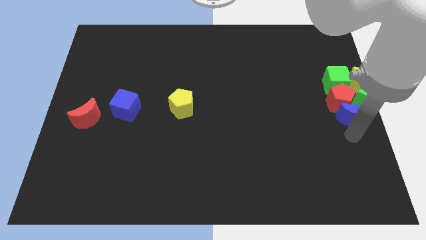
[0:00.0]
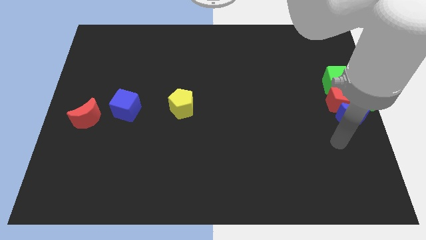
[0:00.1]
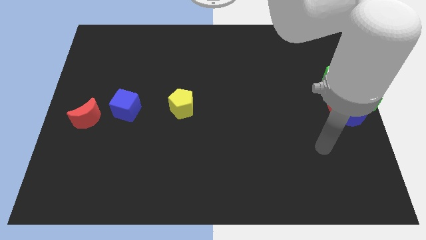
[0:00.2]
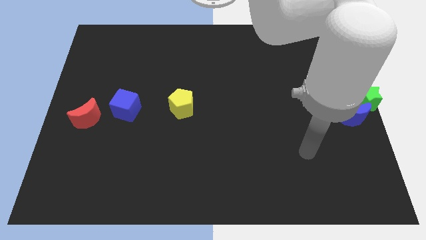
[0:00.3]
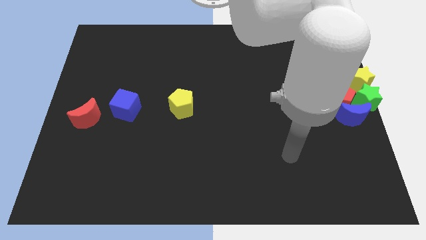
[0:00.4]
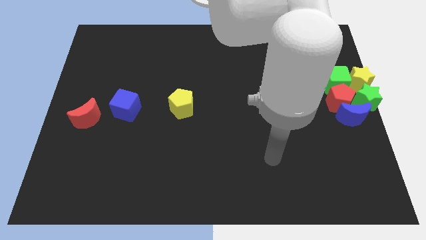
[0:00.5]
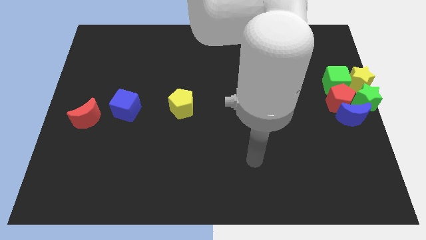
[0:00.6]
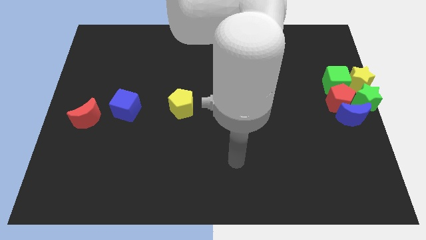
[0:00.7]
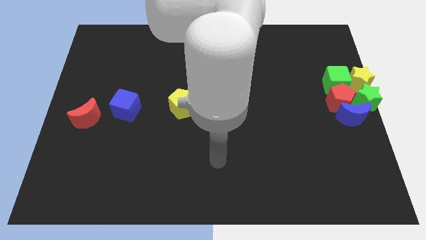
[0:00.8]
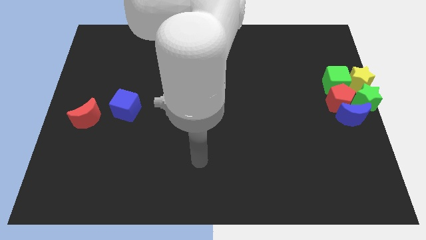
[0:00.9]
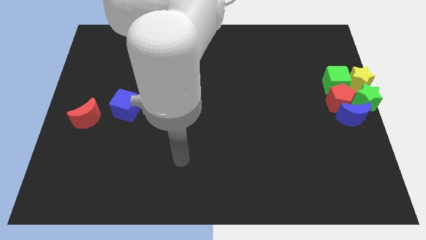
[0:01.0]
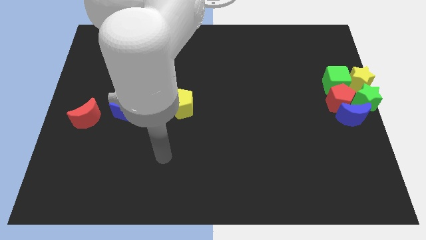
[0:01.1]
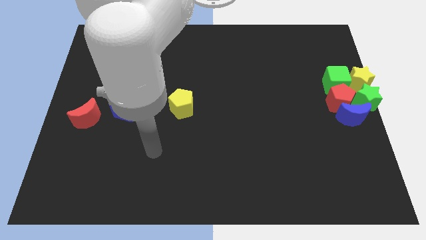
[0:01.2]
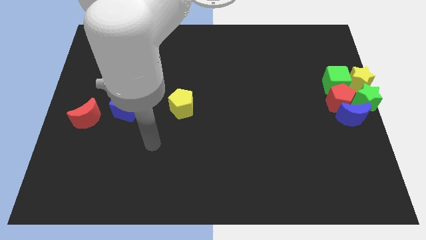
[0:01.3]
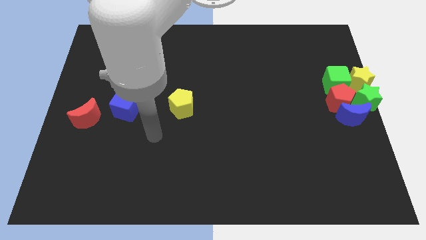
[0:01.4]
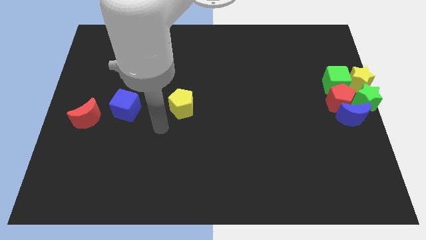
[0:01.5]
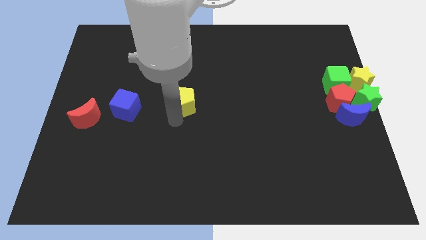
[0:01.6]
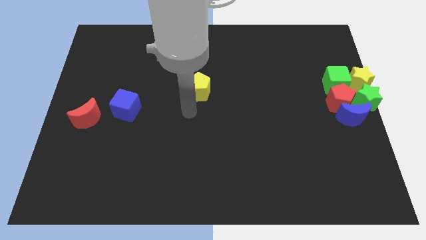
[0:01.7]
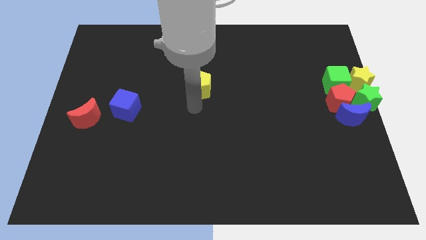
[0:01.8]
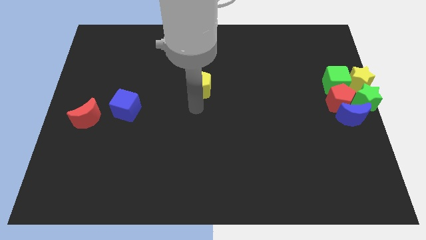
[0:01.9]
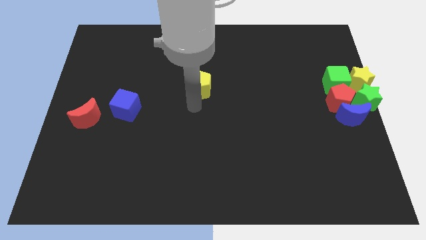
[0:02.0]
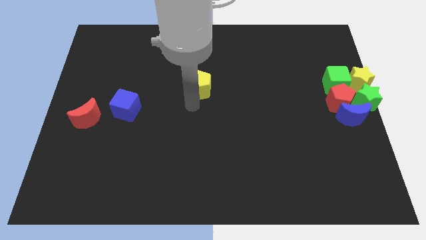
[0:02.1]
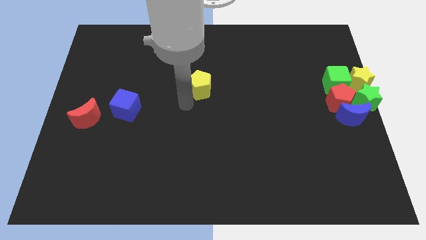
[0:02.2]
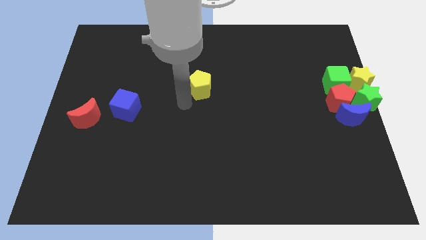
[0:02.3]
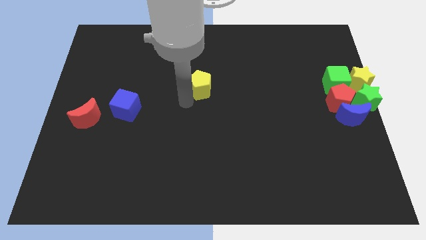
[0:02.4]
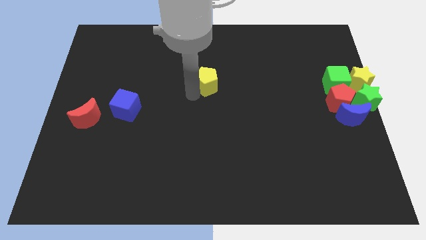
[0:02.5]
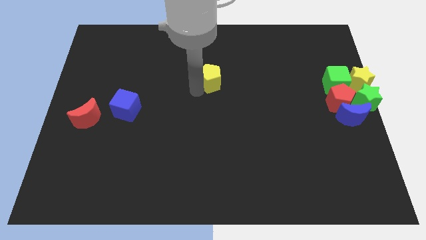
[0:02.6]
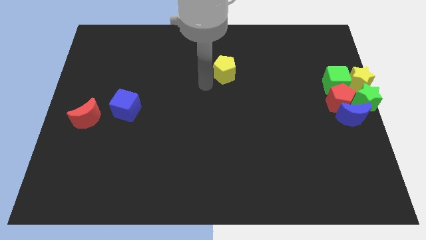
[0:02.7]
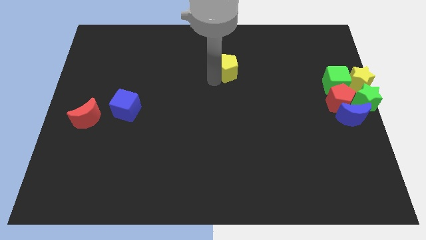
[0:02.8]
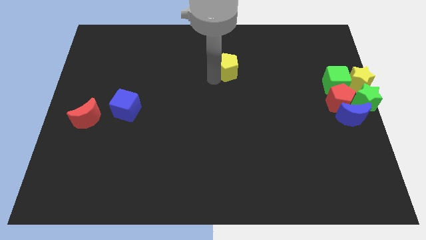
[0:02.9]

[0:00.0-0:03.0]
push the yellow pentagon towards top

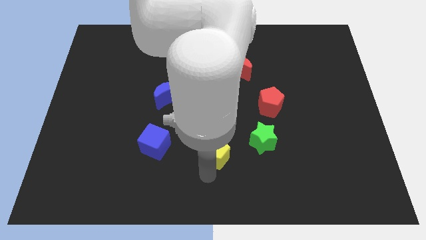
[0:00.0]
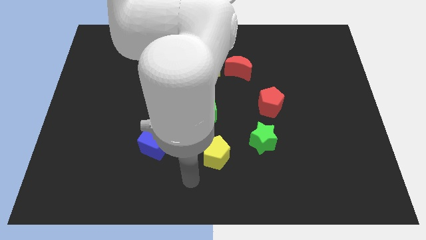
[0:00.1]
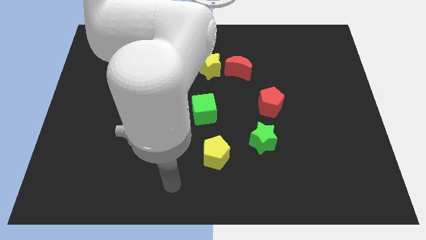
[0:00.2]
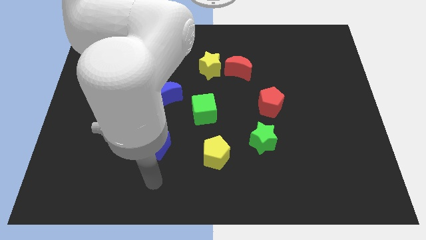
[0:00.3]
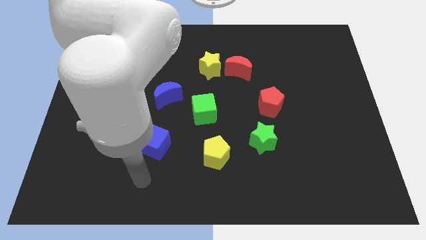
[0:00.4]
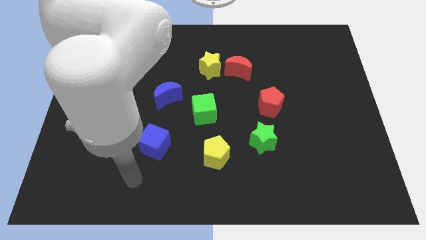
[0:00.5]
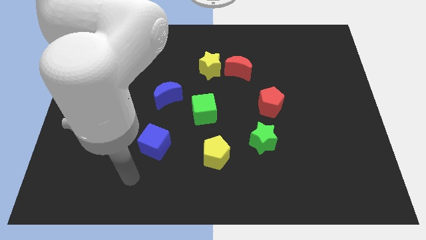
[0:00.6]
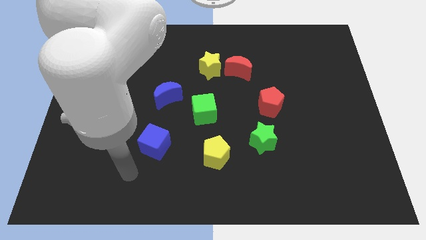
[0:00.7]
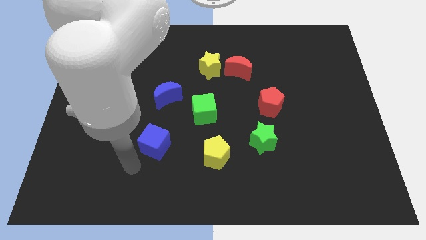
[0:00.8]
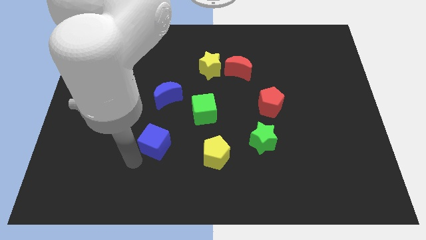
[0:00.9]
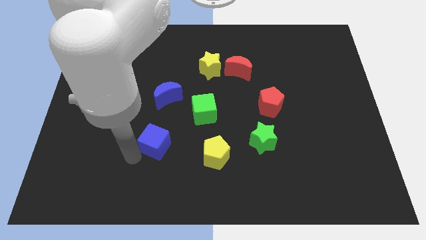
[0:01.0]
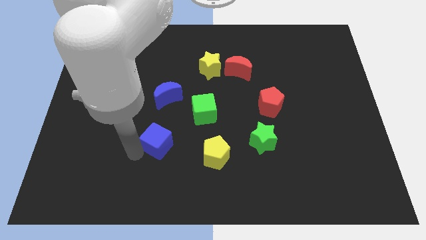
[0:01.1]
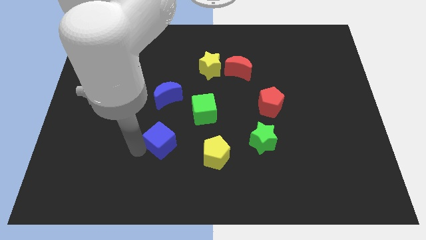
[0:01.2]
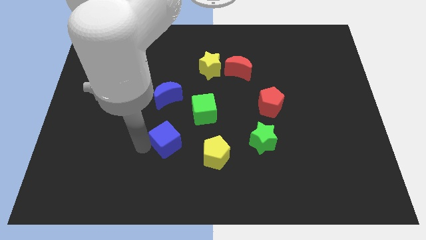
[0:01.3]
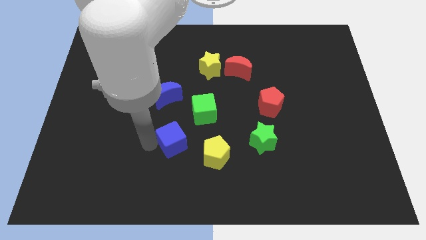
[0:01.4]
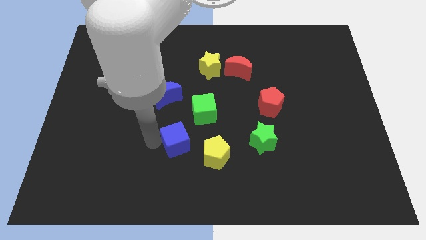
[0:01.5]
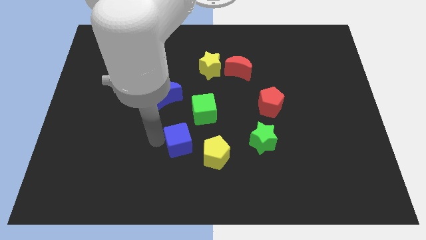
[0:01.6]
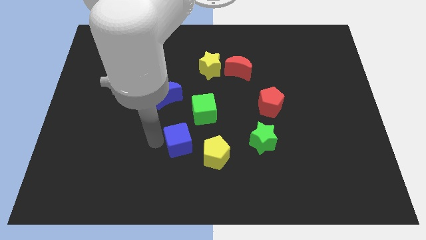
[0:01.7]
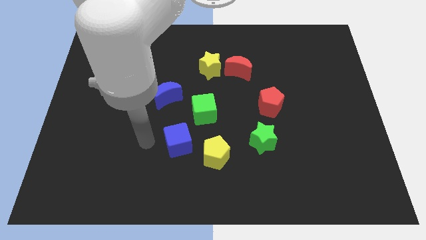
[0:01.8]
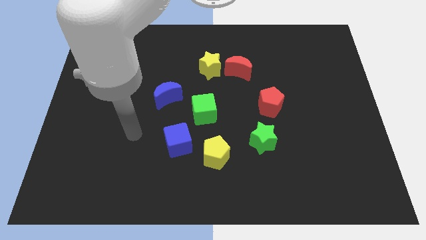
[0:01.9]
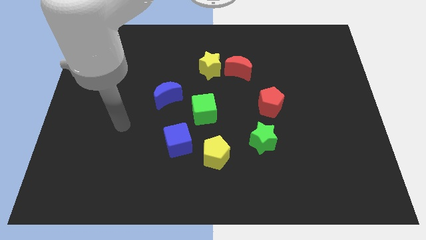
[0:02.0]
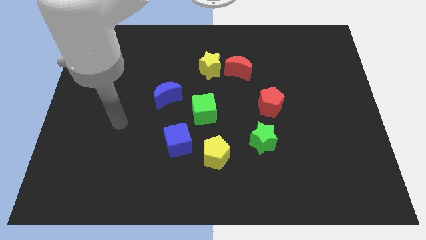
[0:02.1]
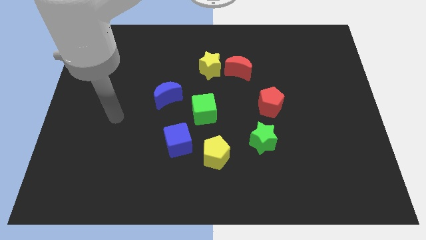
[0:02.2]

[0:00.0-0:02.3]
move the blue cube close to the yellow pentagon

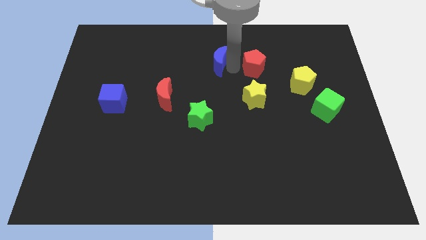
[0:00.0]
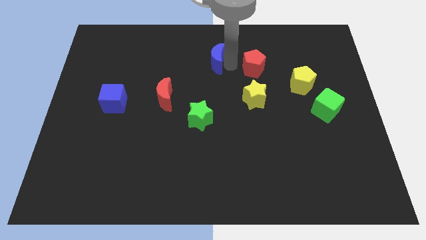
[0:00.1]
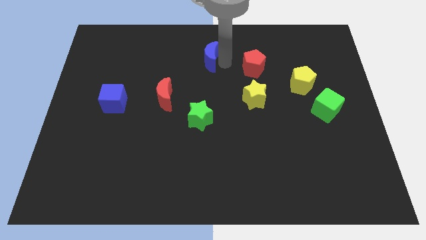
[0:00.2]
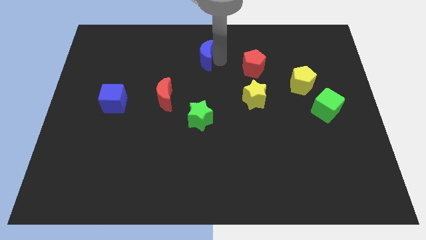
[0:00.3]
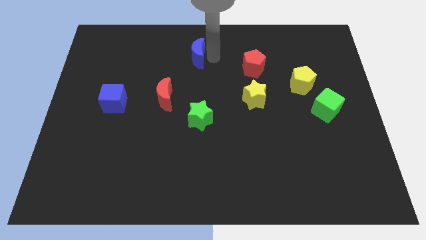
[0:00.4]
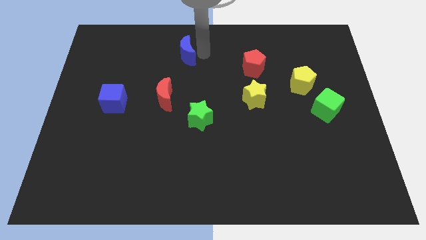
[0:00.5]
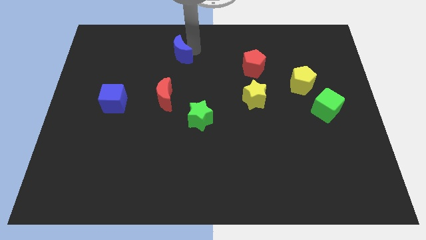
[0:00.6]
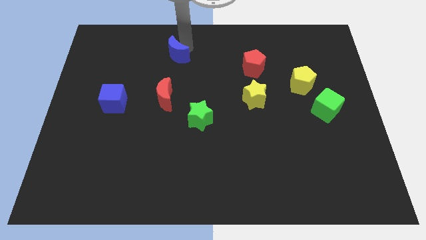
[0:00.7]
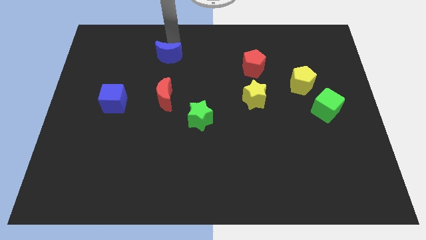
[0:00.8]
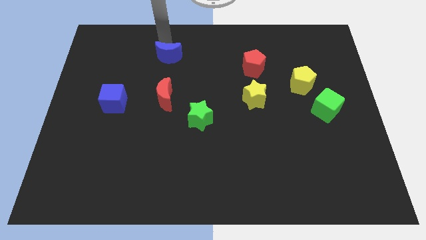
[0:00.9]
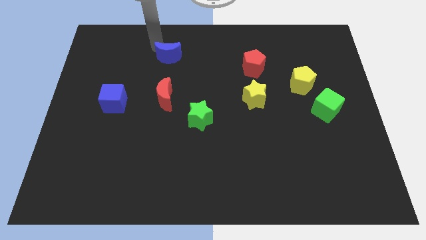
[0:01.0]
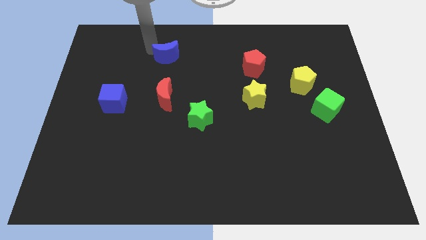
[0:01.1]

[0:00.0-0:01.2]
place blue crescent above red crescent

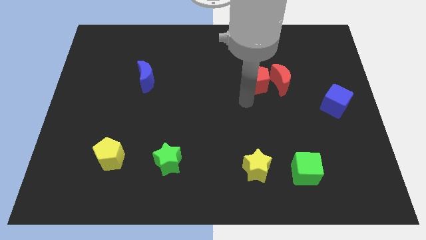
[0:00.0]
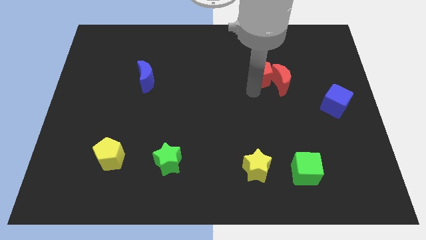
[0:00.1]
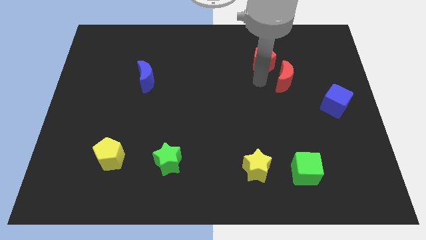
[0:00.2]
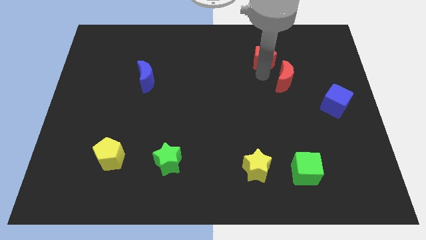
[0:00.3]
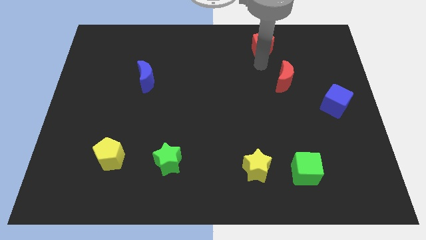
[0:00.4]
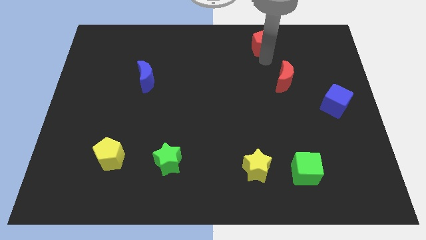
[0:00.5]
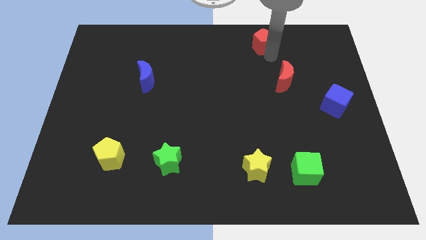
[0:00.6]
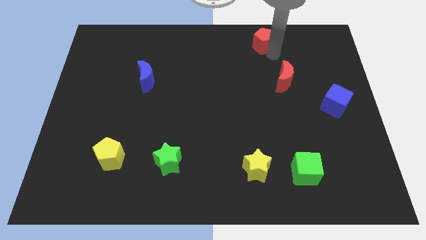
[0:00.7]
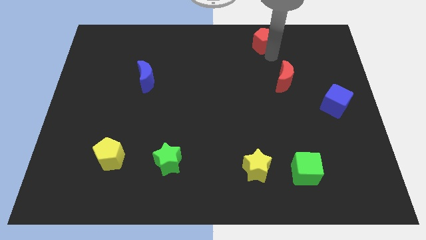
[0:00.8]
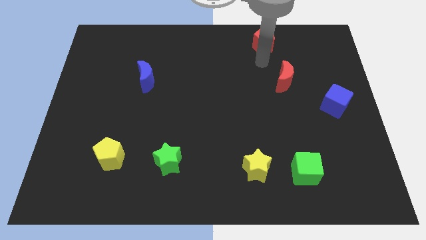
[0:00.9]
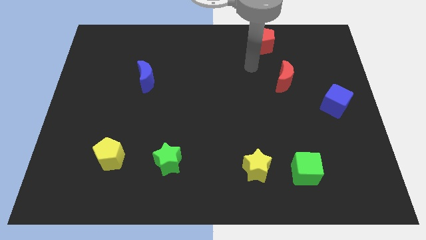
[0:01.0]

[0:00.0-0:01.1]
separate the red pentagon from the red crescent

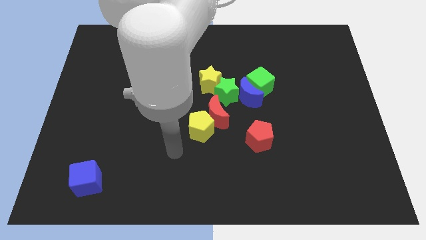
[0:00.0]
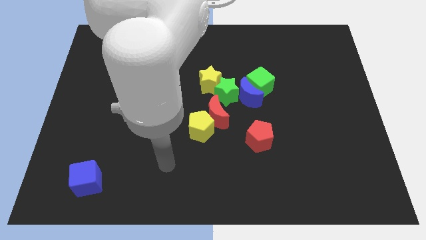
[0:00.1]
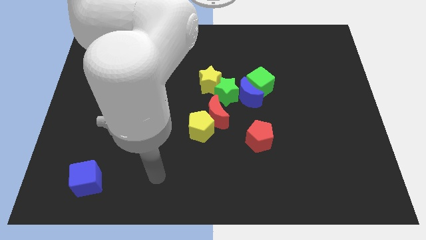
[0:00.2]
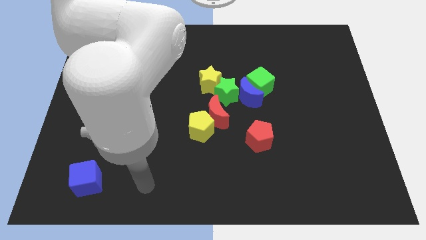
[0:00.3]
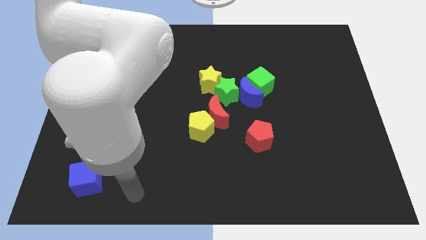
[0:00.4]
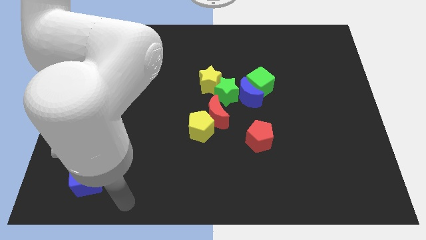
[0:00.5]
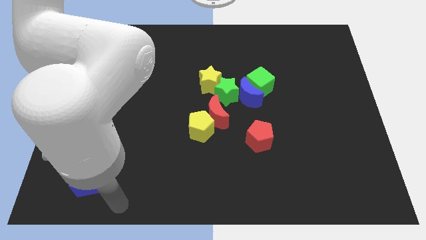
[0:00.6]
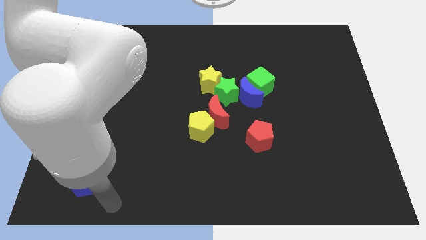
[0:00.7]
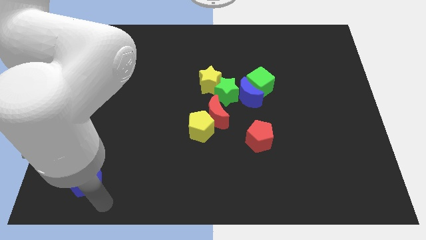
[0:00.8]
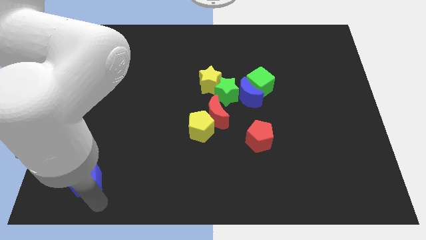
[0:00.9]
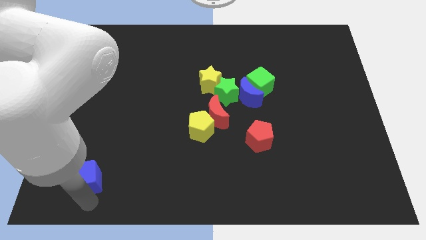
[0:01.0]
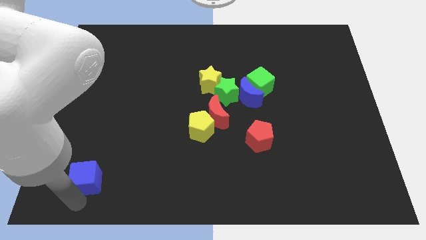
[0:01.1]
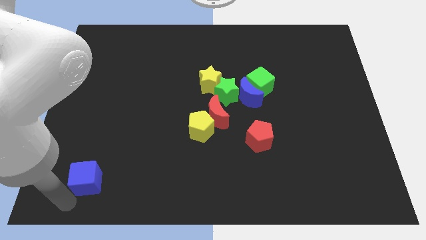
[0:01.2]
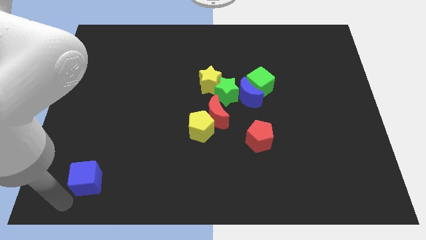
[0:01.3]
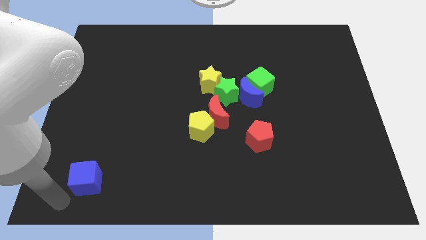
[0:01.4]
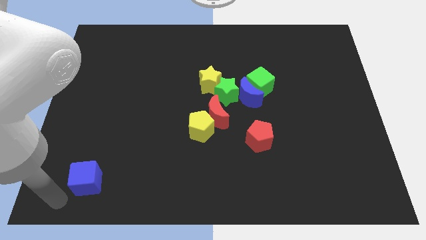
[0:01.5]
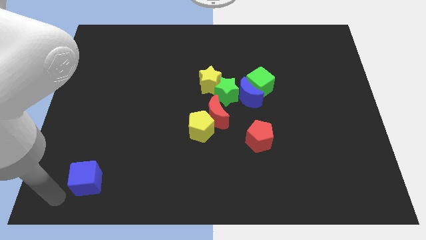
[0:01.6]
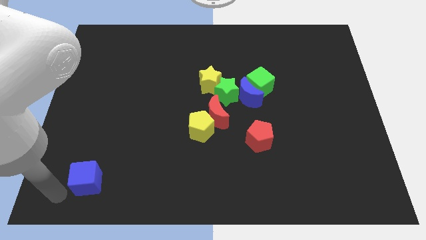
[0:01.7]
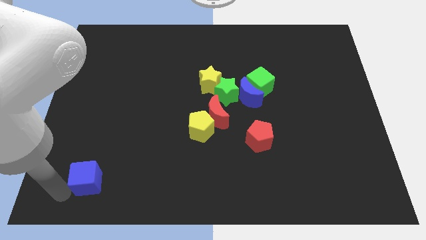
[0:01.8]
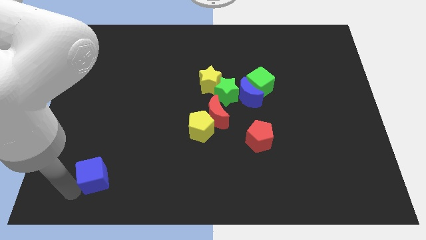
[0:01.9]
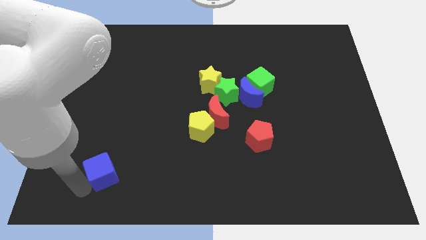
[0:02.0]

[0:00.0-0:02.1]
go near blue cube
